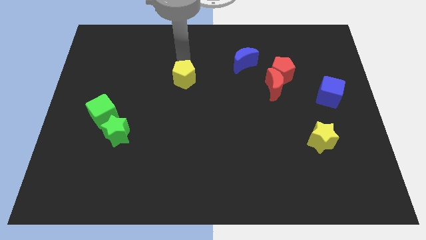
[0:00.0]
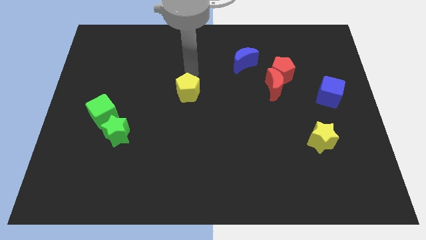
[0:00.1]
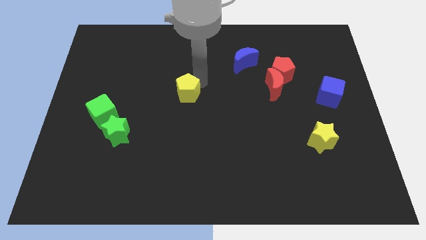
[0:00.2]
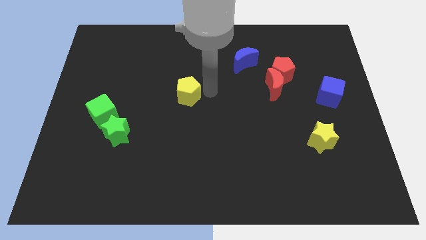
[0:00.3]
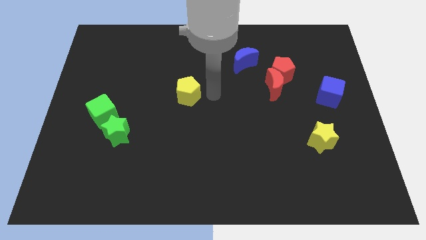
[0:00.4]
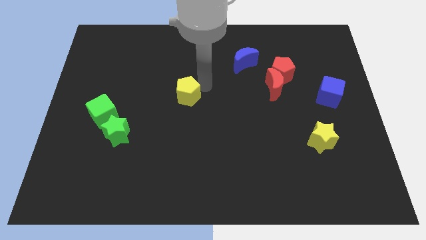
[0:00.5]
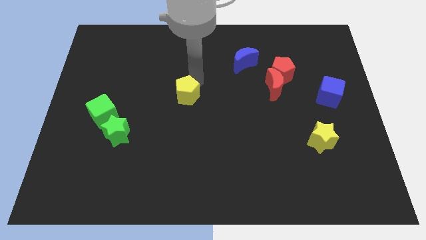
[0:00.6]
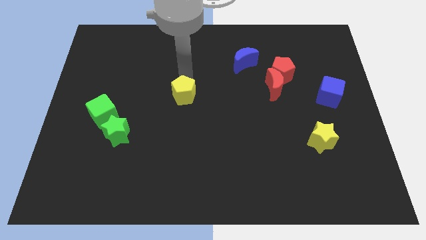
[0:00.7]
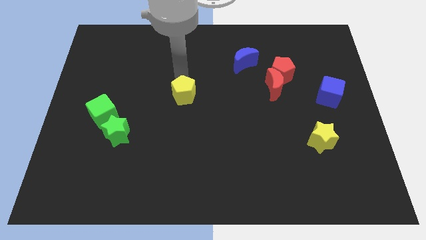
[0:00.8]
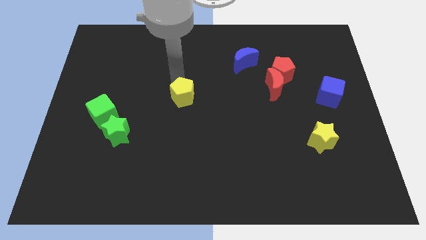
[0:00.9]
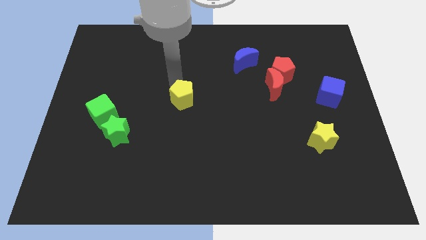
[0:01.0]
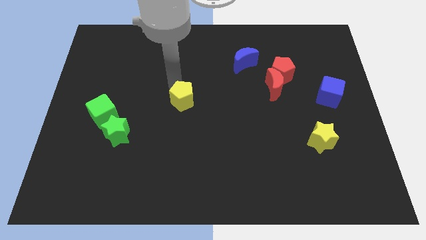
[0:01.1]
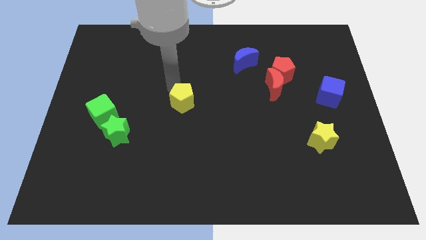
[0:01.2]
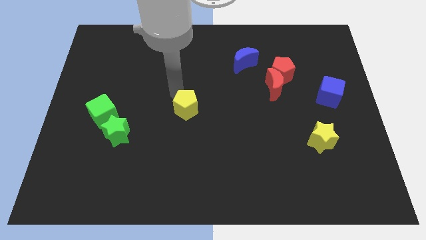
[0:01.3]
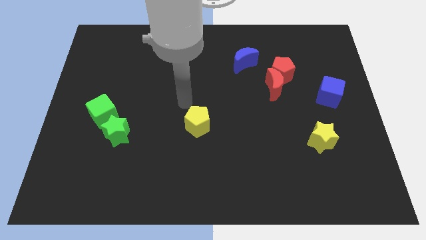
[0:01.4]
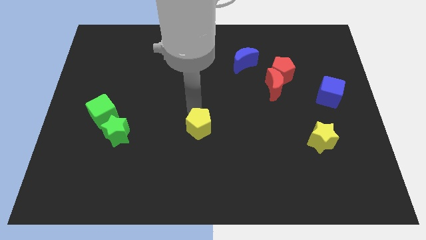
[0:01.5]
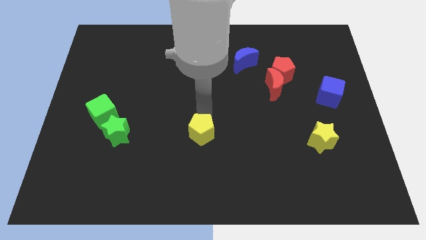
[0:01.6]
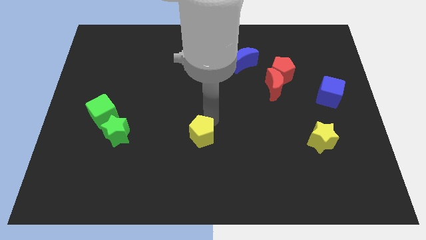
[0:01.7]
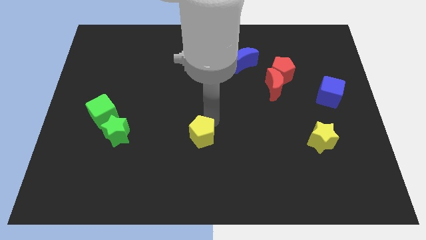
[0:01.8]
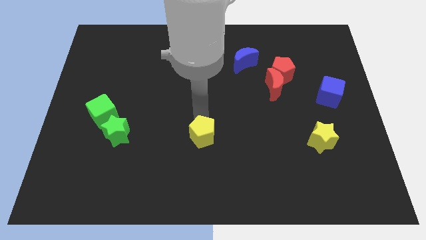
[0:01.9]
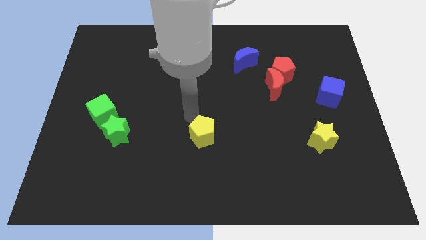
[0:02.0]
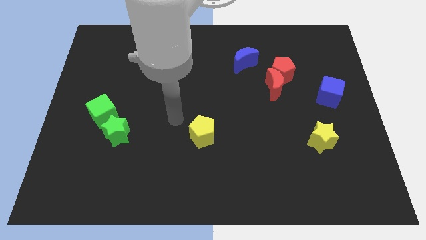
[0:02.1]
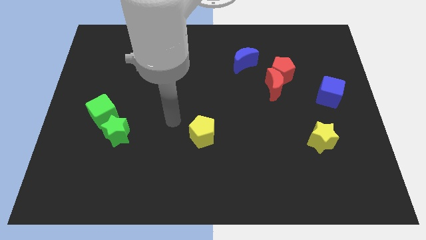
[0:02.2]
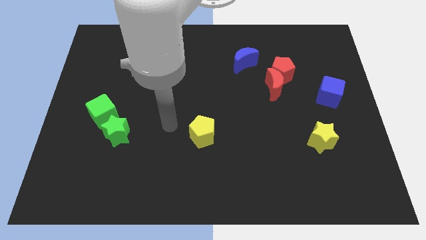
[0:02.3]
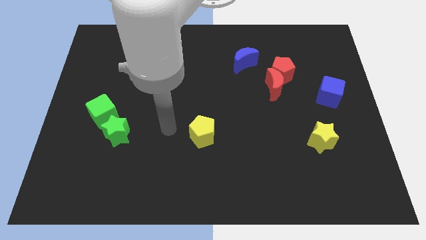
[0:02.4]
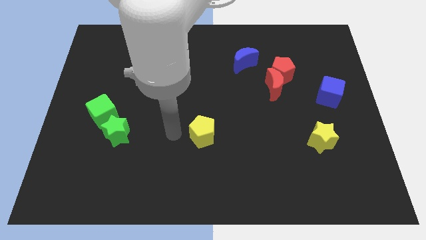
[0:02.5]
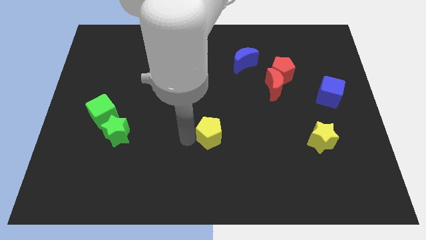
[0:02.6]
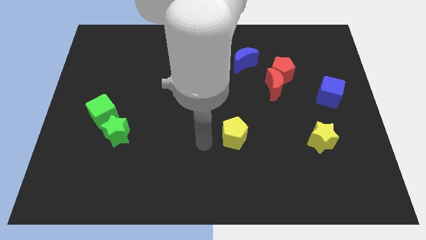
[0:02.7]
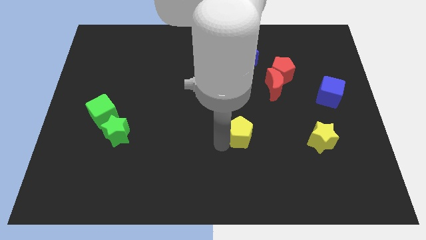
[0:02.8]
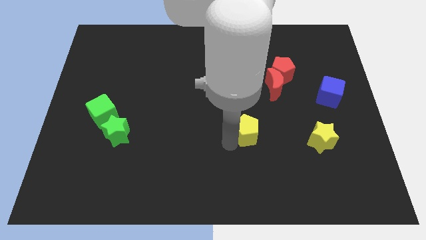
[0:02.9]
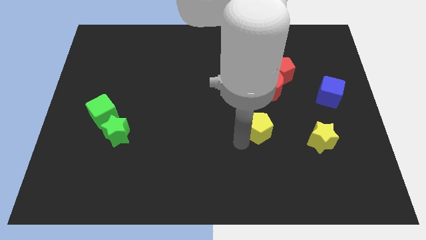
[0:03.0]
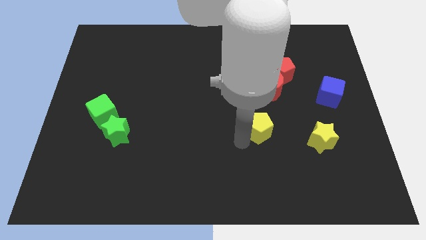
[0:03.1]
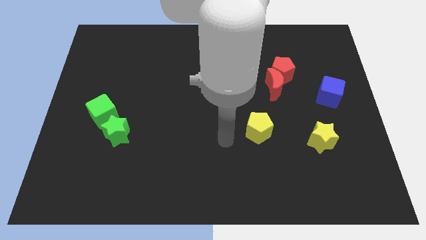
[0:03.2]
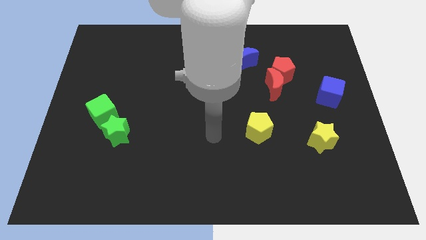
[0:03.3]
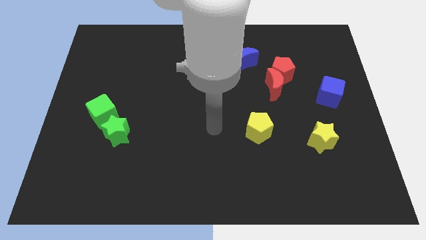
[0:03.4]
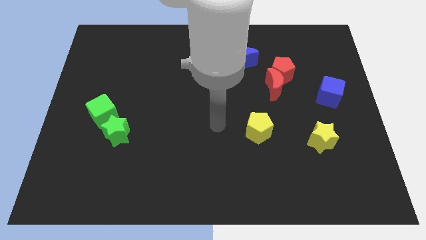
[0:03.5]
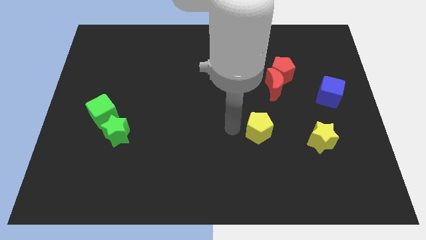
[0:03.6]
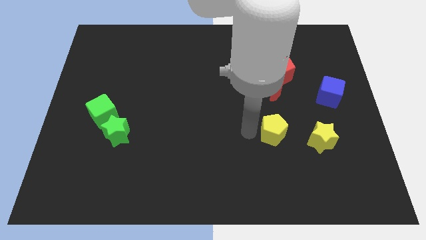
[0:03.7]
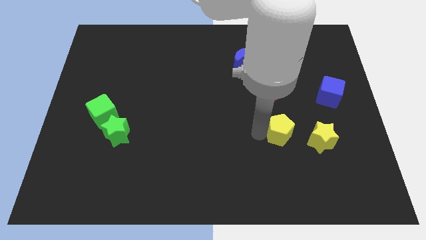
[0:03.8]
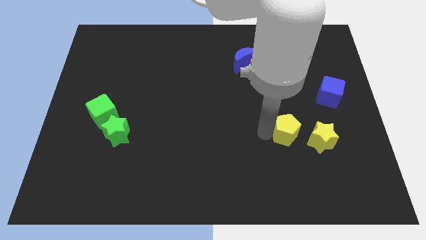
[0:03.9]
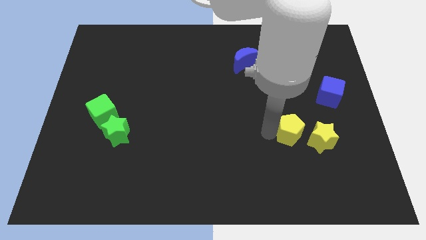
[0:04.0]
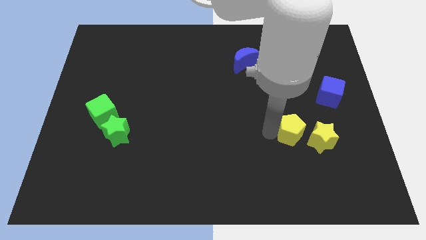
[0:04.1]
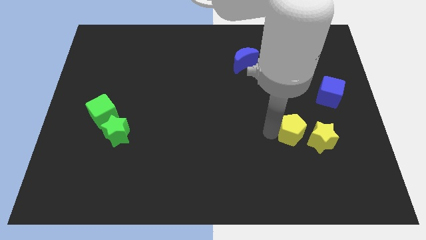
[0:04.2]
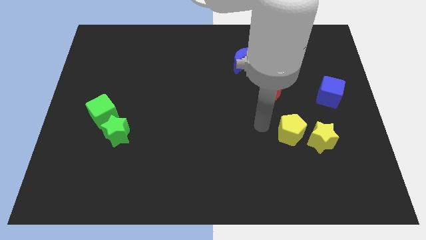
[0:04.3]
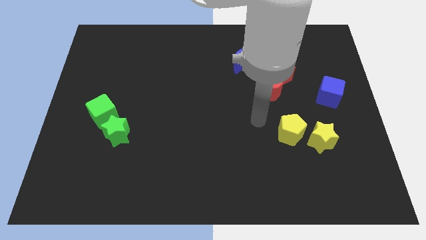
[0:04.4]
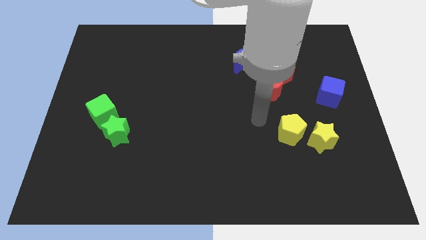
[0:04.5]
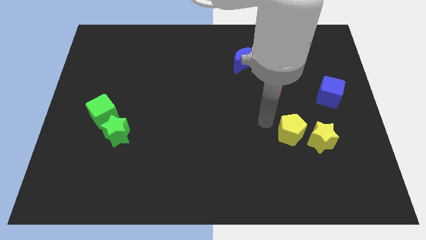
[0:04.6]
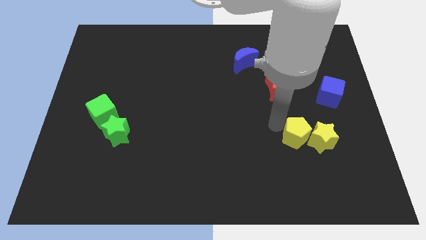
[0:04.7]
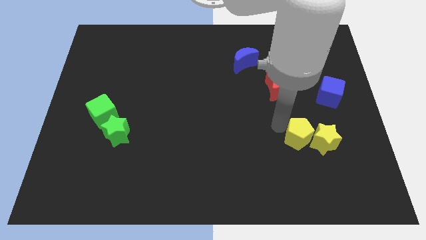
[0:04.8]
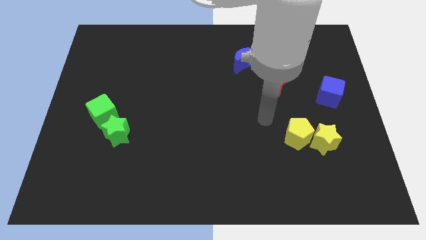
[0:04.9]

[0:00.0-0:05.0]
move the yellow pentagon to the left of the yellow star in the board

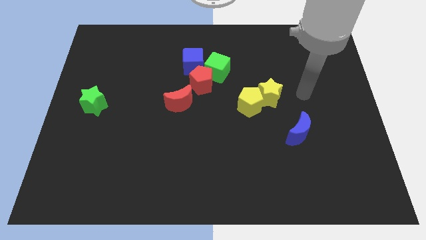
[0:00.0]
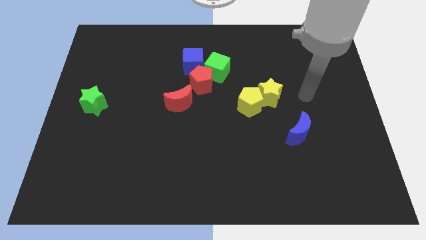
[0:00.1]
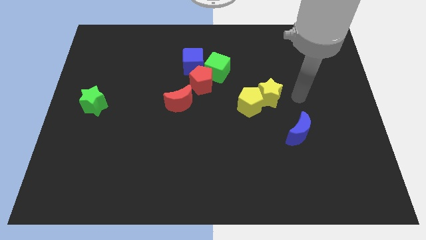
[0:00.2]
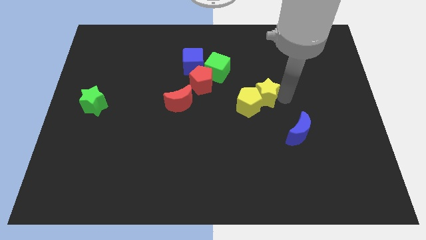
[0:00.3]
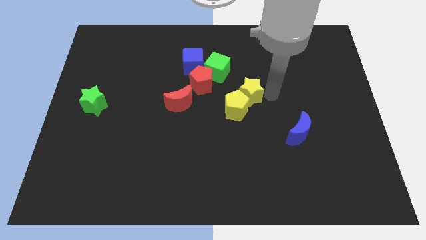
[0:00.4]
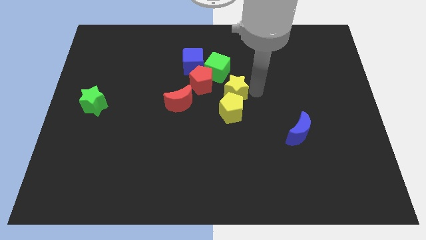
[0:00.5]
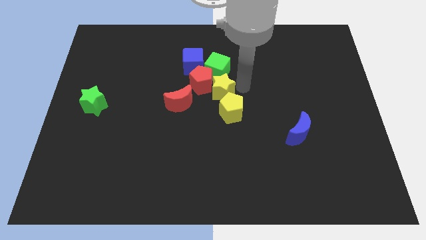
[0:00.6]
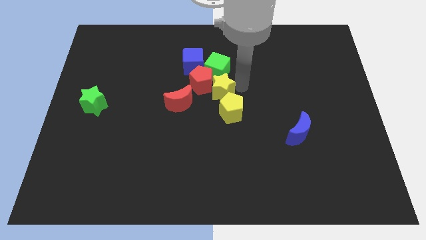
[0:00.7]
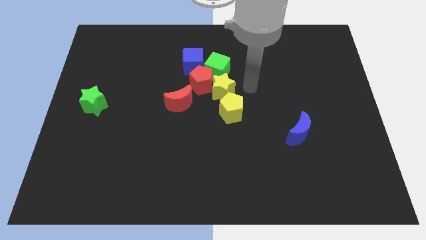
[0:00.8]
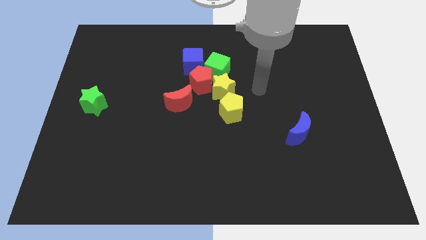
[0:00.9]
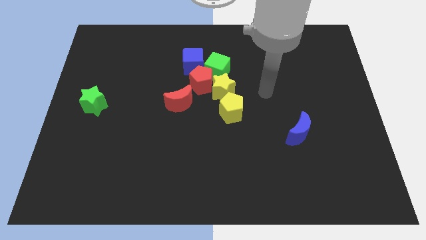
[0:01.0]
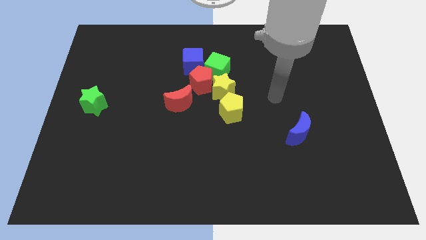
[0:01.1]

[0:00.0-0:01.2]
move the yellow star to the bottom right of the red pentagon

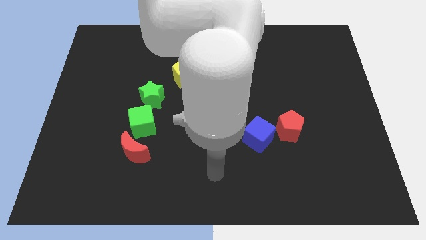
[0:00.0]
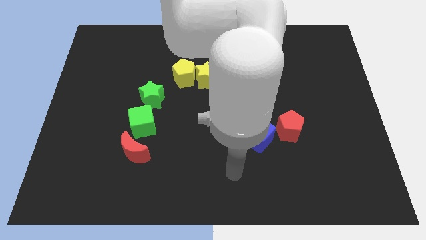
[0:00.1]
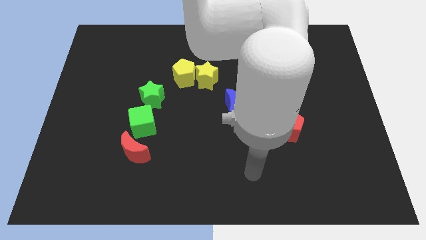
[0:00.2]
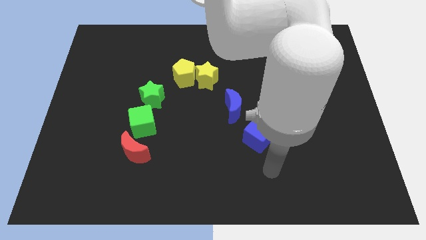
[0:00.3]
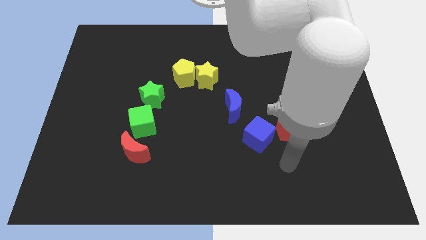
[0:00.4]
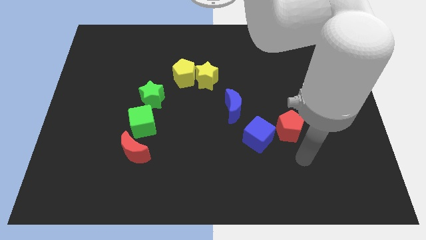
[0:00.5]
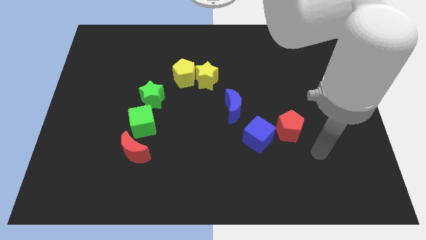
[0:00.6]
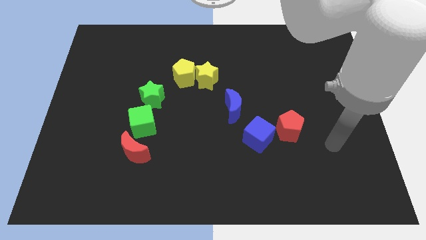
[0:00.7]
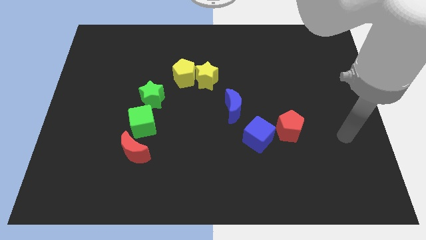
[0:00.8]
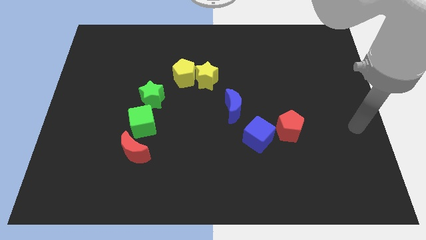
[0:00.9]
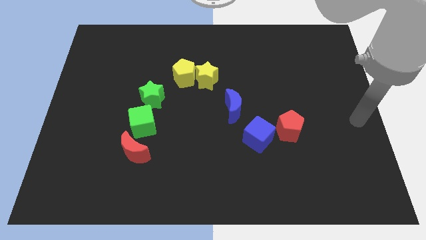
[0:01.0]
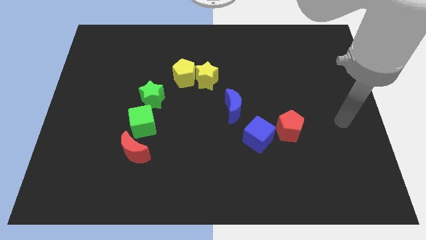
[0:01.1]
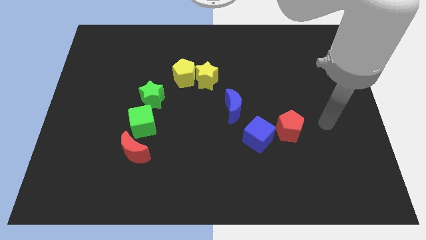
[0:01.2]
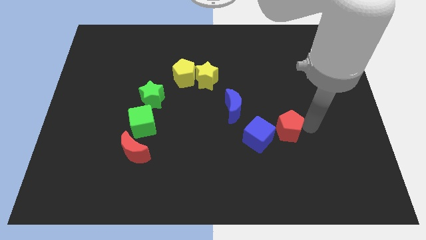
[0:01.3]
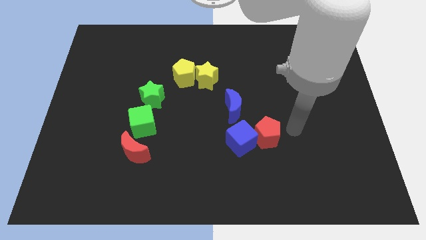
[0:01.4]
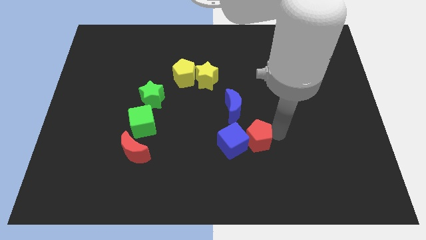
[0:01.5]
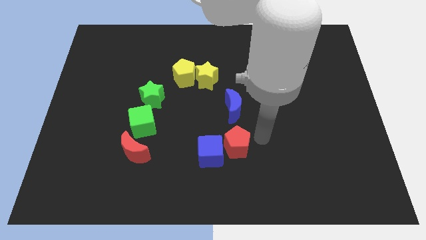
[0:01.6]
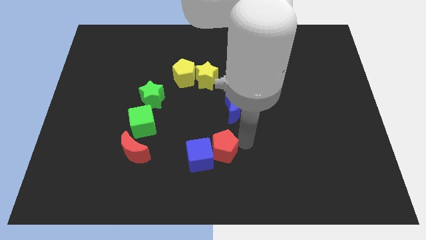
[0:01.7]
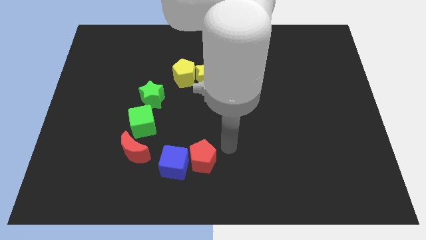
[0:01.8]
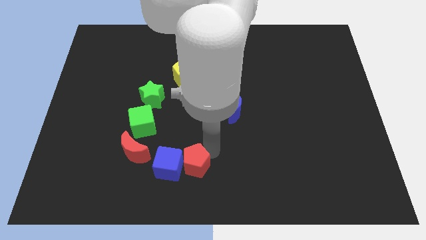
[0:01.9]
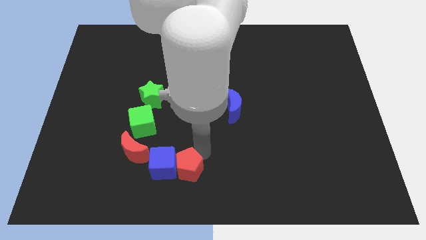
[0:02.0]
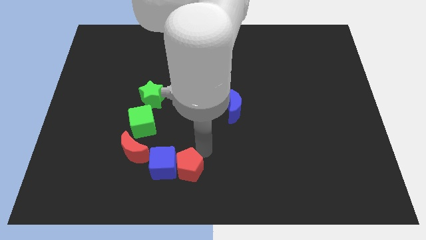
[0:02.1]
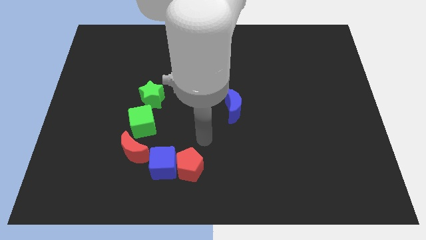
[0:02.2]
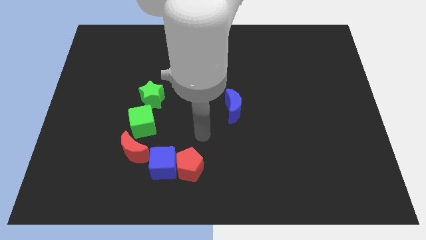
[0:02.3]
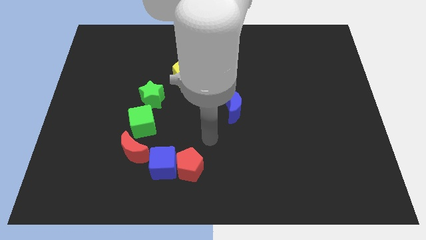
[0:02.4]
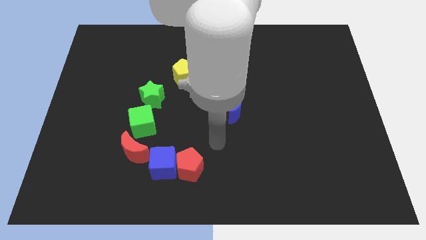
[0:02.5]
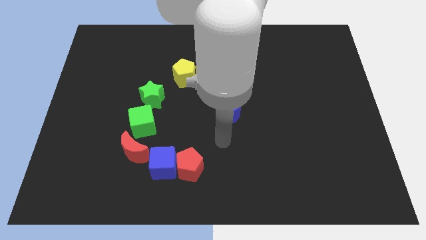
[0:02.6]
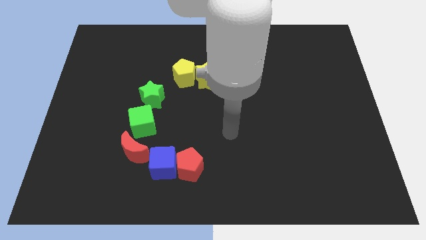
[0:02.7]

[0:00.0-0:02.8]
push the red pentagon along with the blue cube into the red crescent
